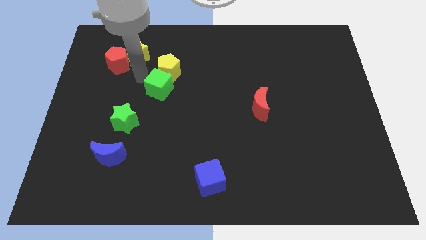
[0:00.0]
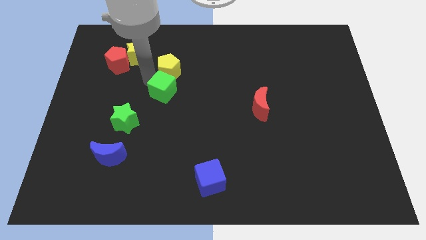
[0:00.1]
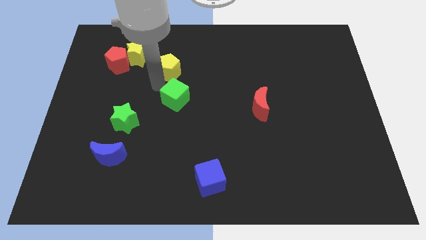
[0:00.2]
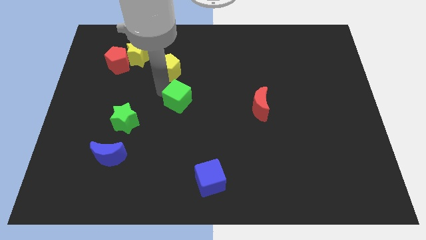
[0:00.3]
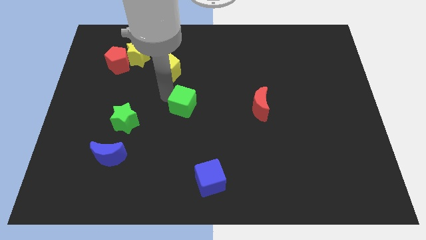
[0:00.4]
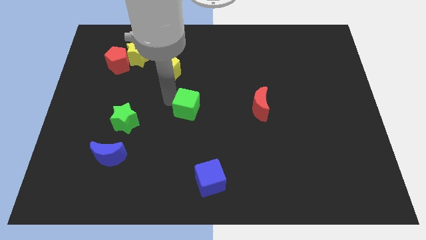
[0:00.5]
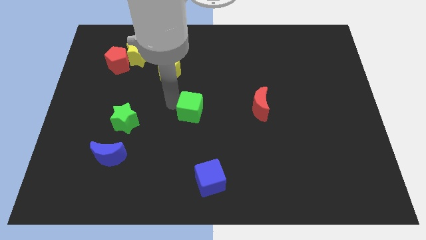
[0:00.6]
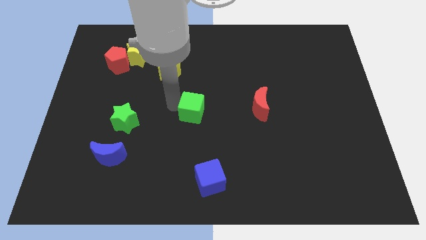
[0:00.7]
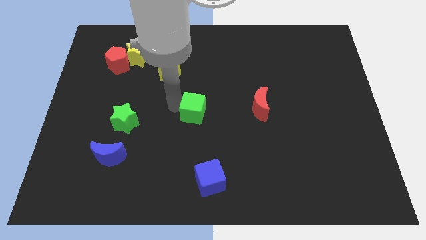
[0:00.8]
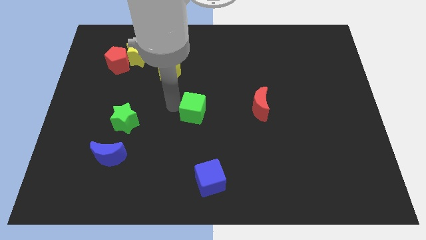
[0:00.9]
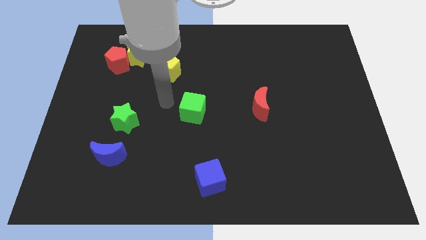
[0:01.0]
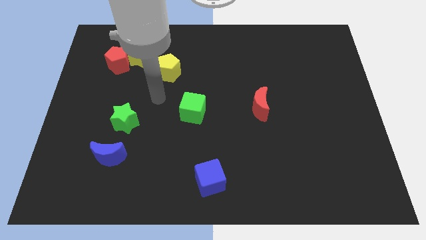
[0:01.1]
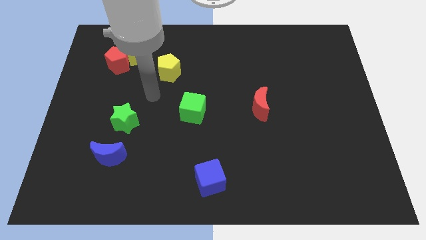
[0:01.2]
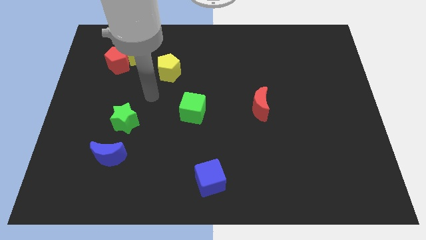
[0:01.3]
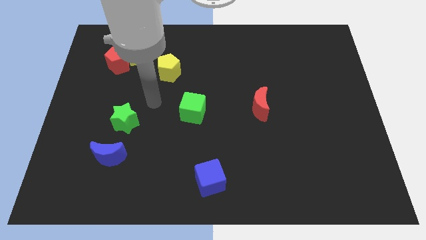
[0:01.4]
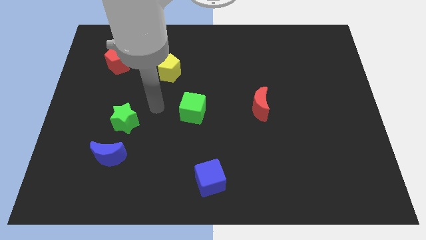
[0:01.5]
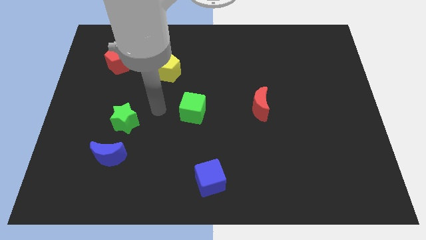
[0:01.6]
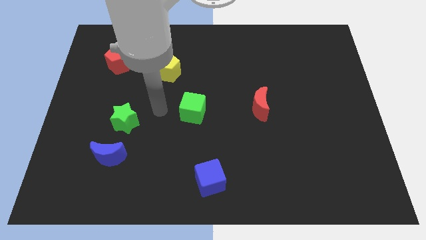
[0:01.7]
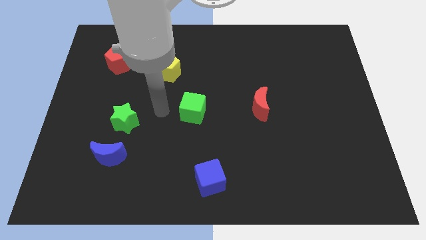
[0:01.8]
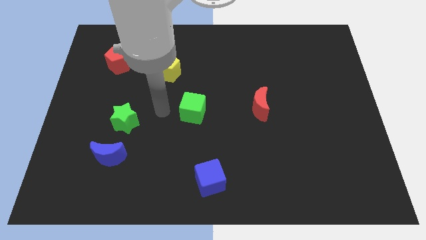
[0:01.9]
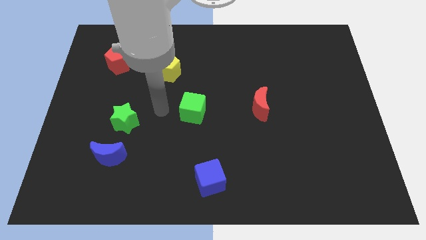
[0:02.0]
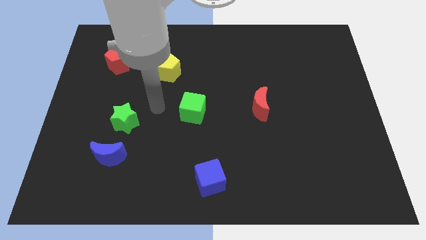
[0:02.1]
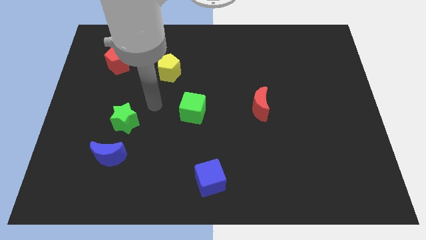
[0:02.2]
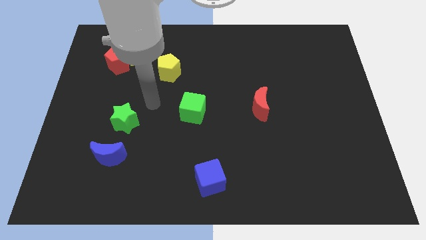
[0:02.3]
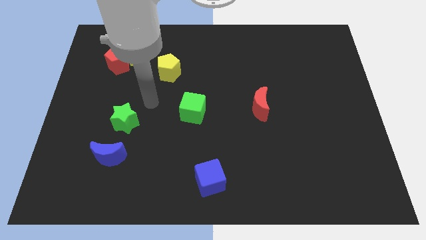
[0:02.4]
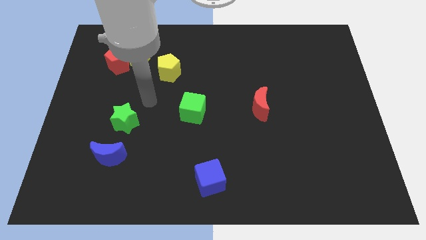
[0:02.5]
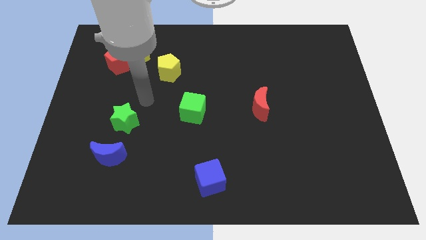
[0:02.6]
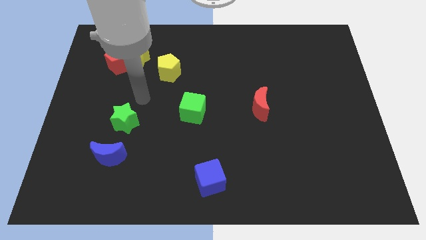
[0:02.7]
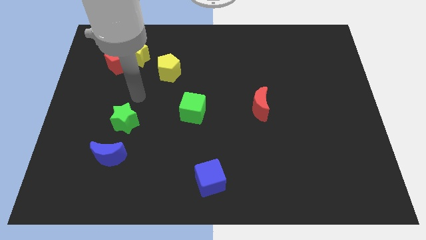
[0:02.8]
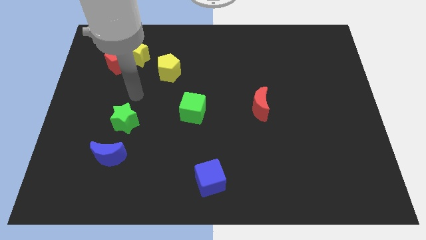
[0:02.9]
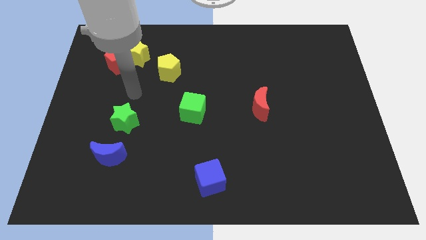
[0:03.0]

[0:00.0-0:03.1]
push the green cube in between red crescent and green star

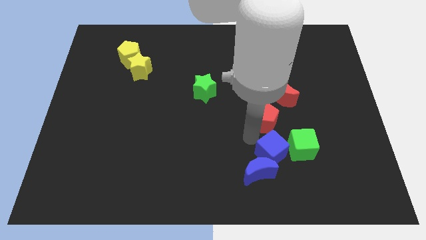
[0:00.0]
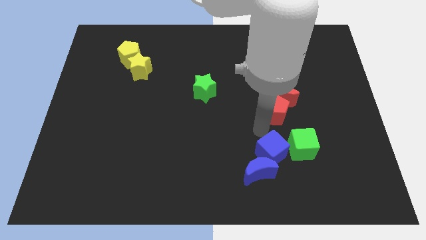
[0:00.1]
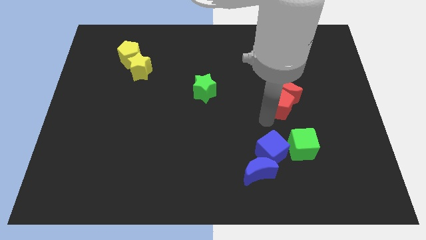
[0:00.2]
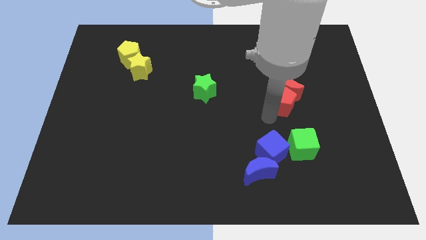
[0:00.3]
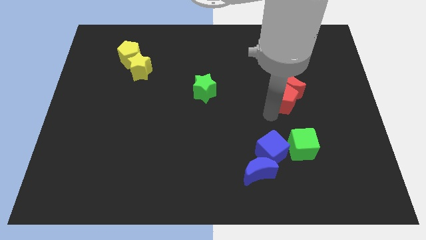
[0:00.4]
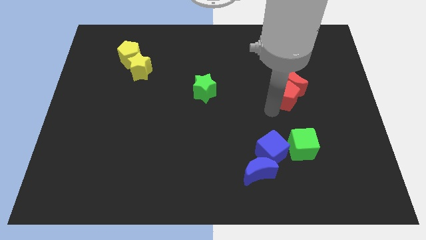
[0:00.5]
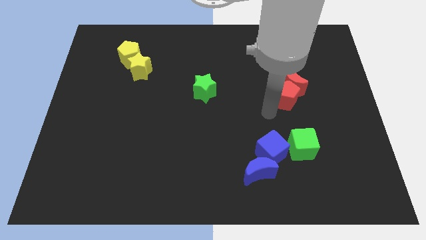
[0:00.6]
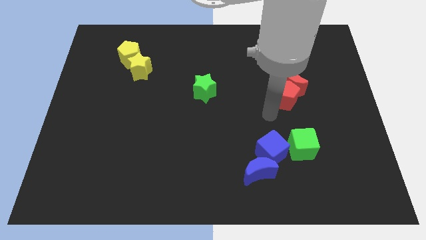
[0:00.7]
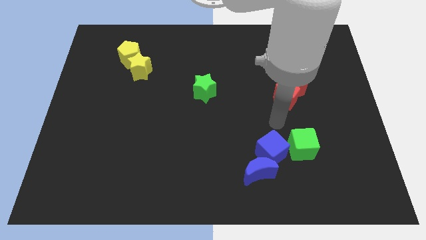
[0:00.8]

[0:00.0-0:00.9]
move red blocks to the top right of the board

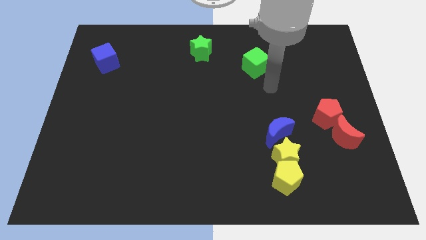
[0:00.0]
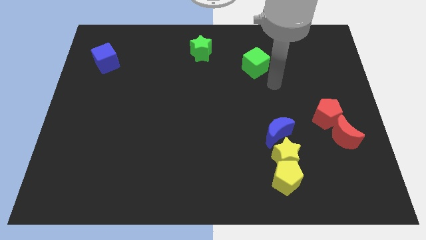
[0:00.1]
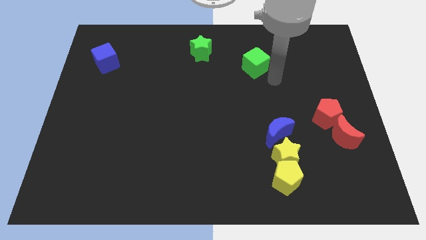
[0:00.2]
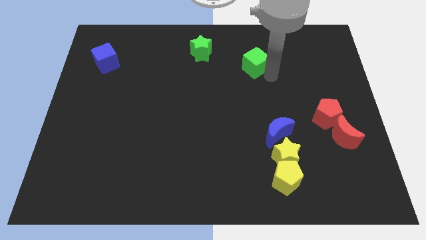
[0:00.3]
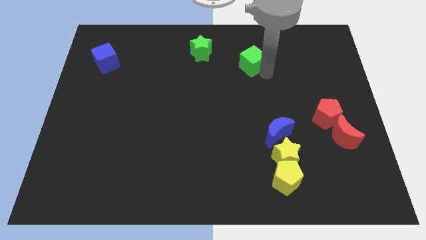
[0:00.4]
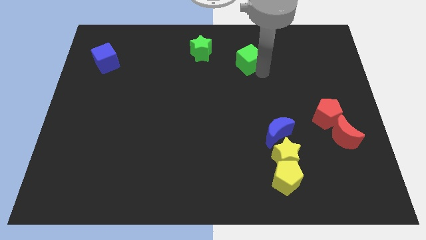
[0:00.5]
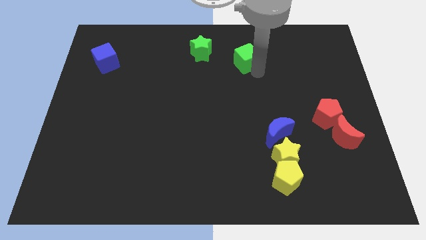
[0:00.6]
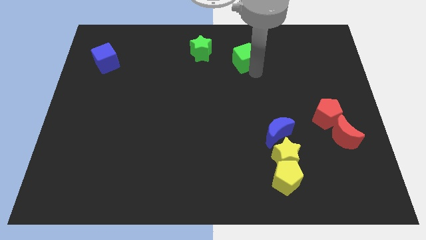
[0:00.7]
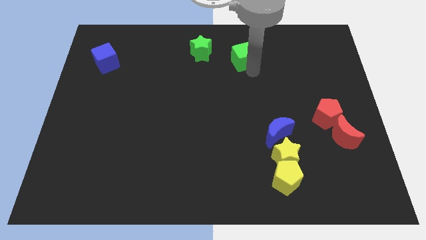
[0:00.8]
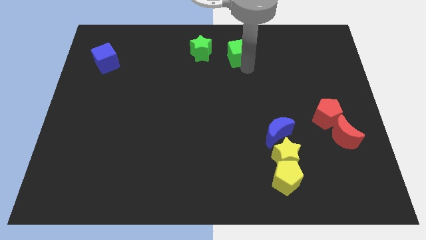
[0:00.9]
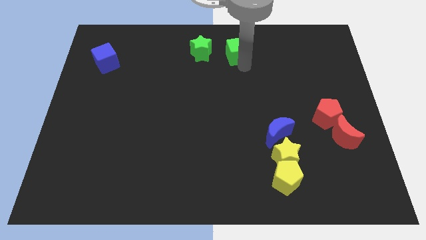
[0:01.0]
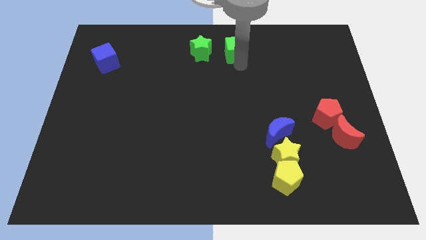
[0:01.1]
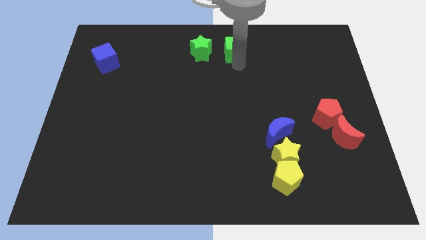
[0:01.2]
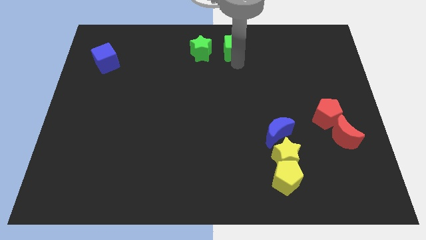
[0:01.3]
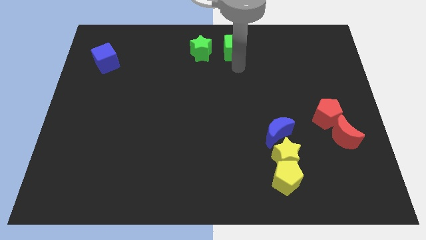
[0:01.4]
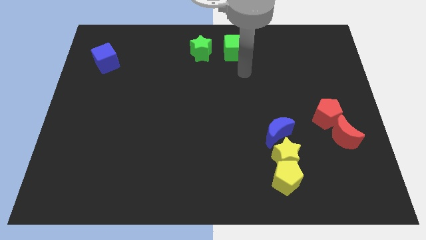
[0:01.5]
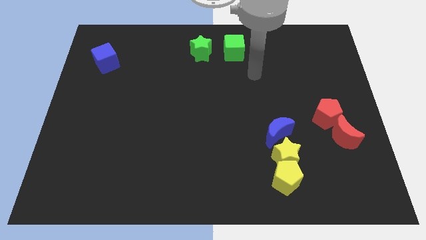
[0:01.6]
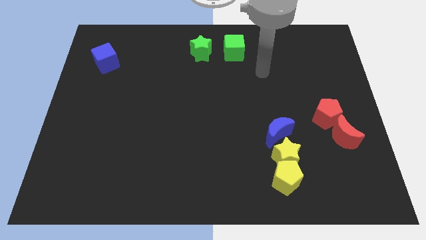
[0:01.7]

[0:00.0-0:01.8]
place green cube towards the top center of the board

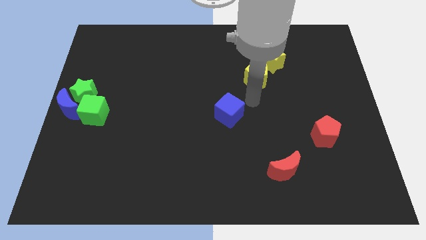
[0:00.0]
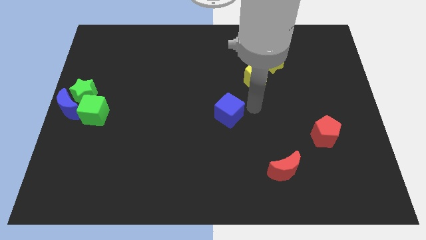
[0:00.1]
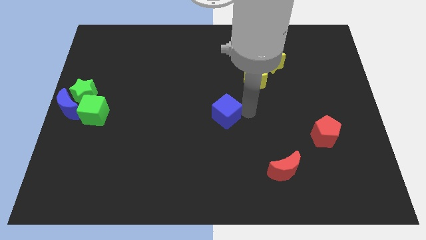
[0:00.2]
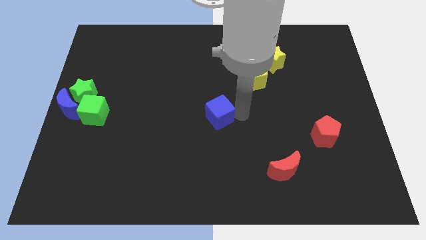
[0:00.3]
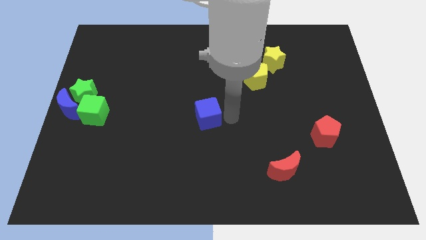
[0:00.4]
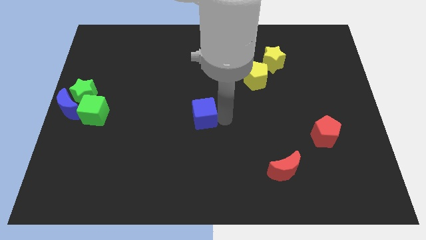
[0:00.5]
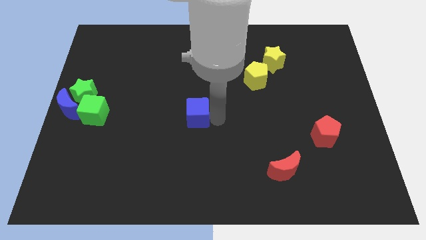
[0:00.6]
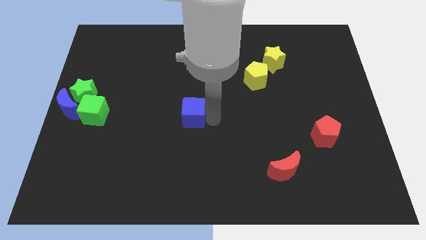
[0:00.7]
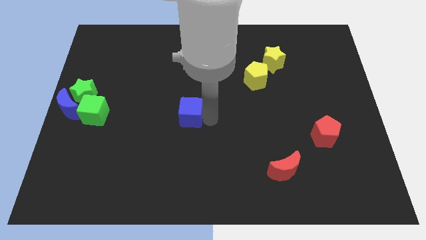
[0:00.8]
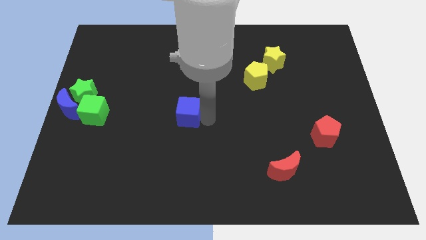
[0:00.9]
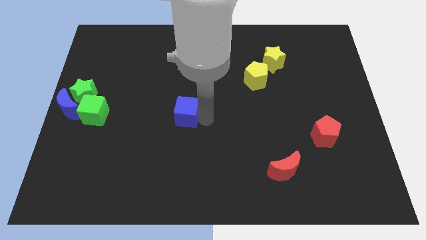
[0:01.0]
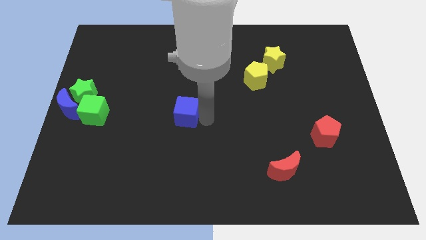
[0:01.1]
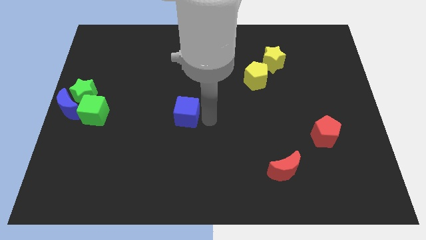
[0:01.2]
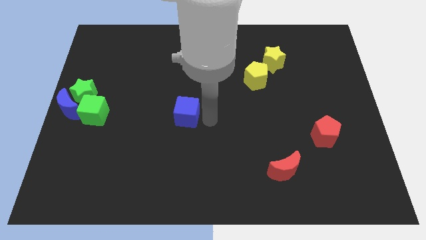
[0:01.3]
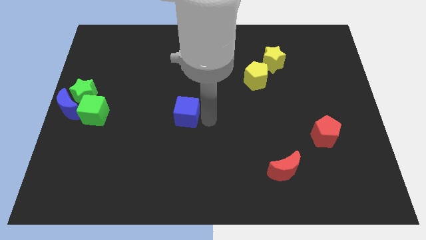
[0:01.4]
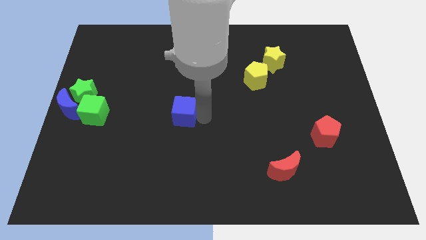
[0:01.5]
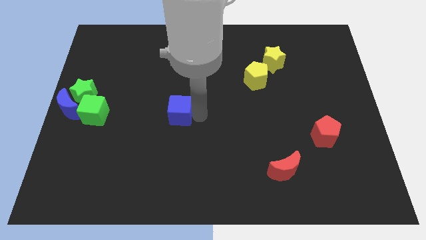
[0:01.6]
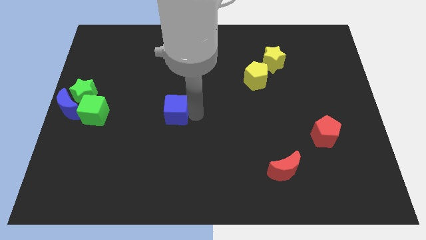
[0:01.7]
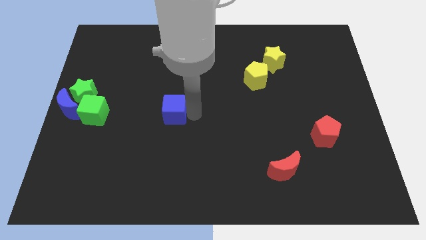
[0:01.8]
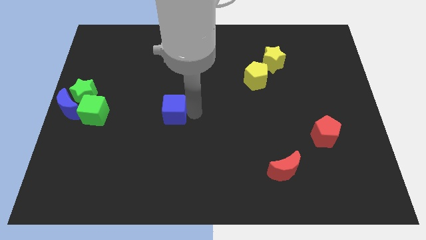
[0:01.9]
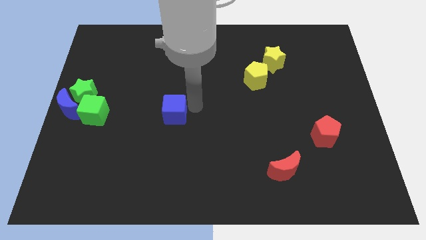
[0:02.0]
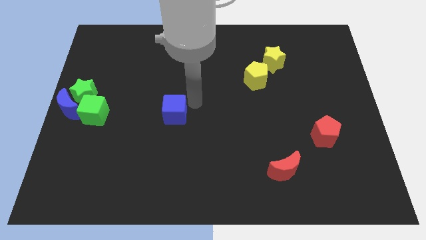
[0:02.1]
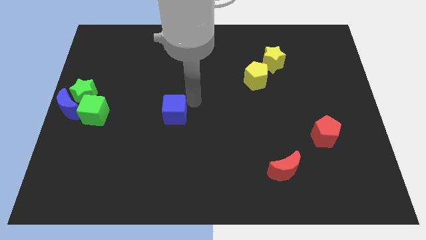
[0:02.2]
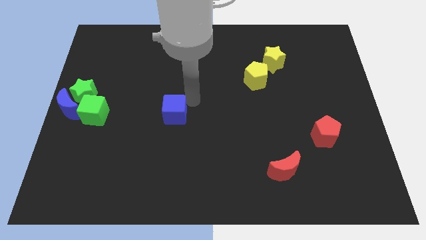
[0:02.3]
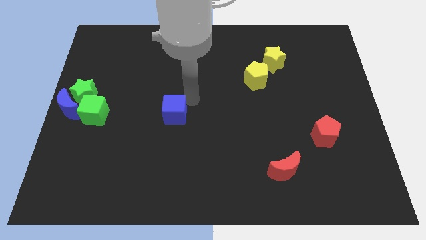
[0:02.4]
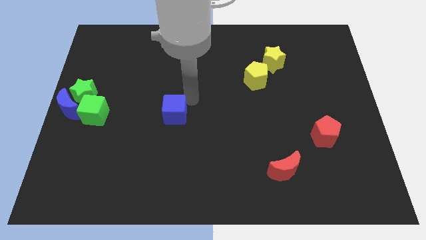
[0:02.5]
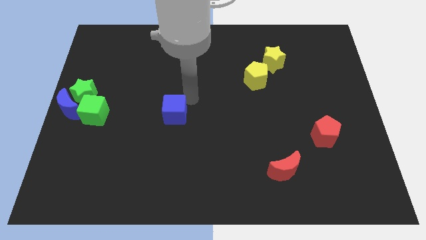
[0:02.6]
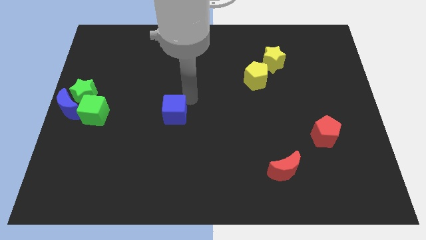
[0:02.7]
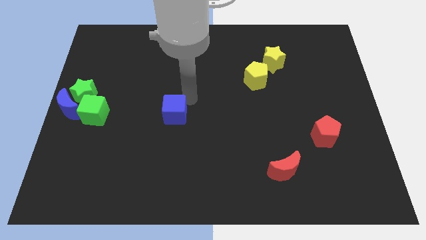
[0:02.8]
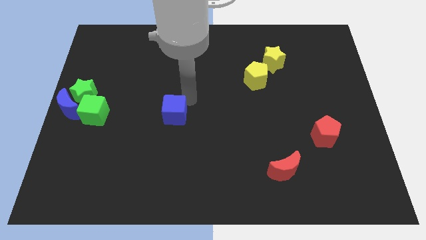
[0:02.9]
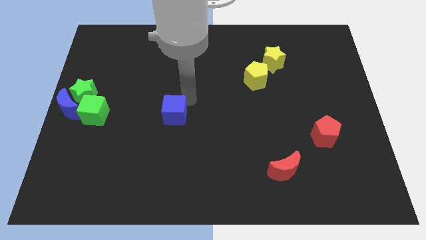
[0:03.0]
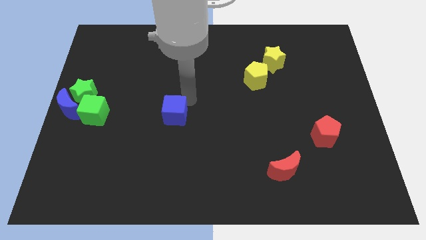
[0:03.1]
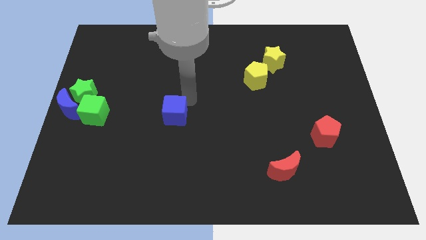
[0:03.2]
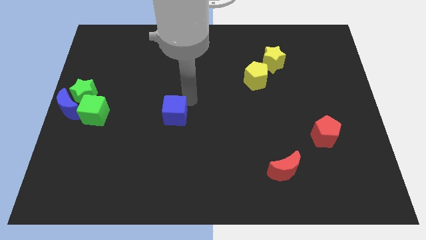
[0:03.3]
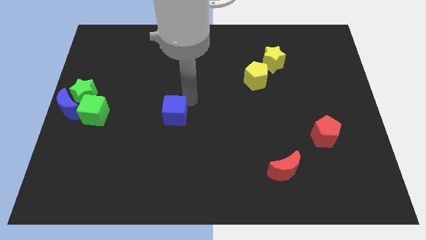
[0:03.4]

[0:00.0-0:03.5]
move the blue cube parallel right to the green cube
